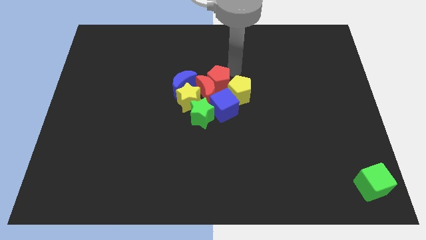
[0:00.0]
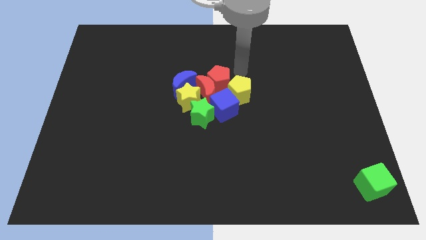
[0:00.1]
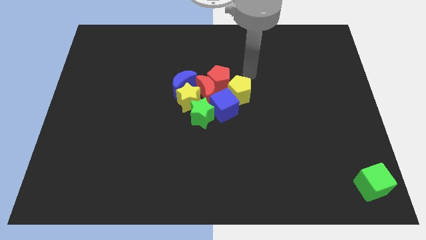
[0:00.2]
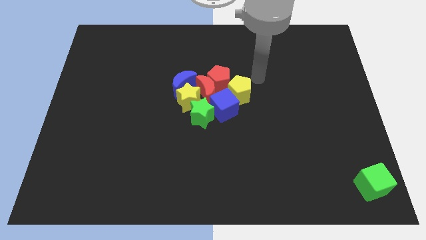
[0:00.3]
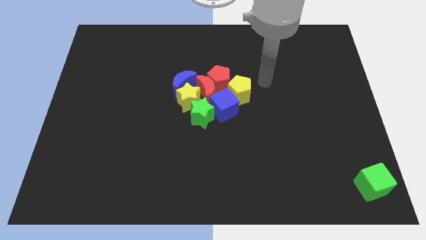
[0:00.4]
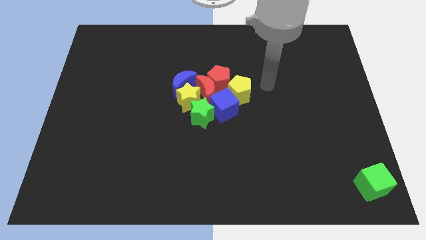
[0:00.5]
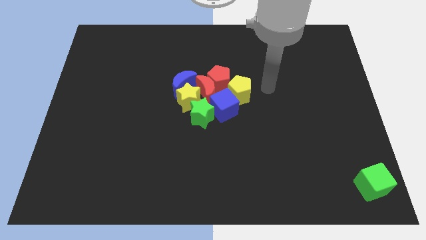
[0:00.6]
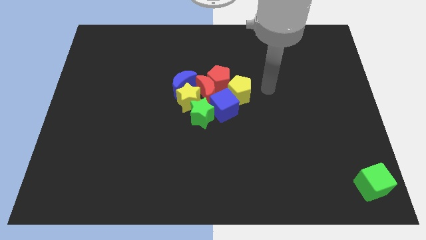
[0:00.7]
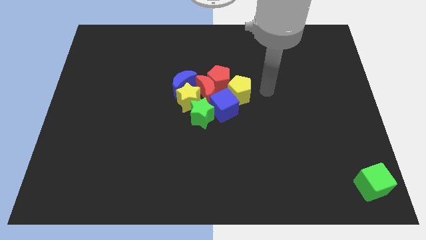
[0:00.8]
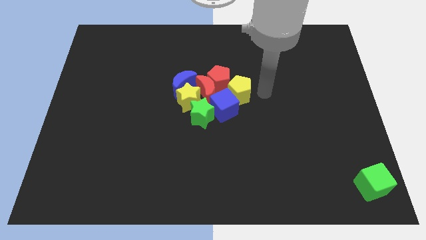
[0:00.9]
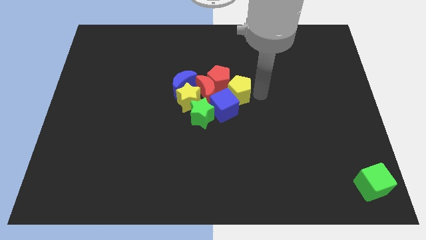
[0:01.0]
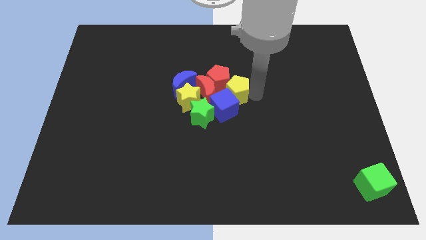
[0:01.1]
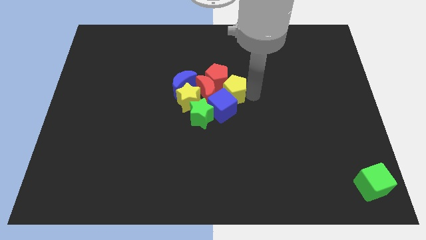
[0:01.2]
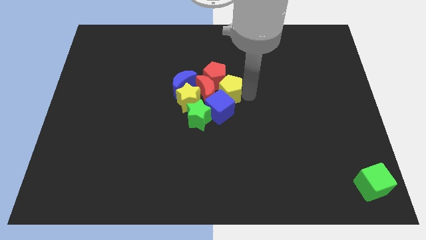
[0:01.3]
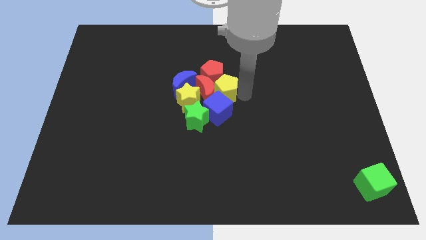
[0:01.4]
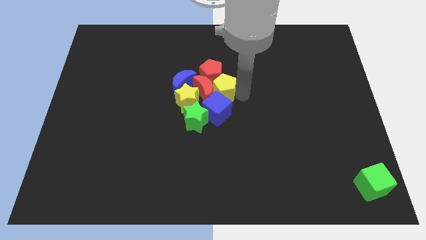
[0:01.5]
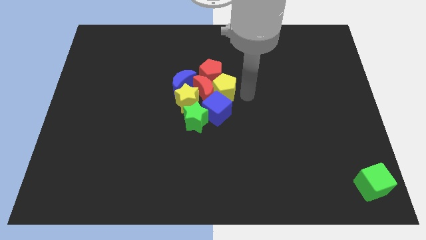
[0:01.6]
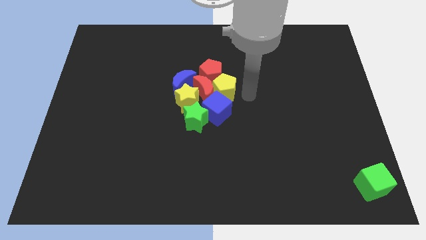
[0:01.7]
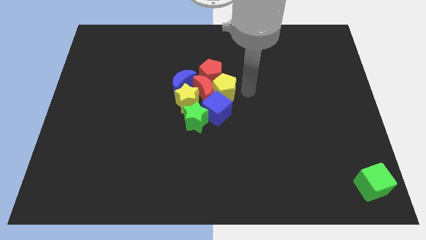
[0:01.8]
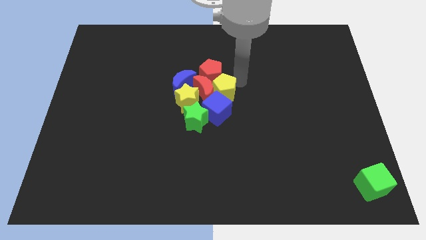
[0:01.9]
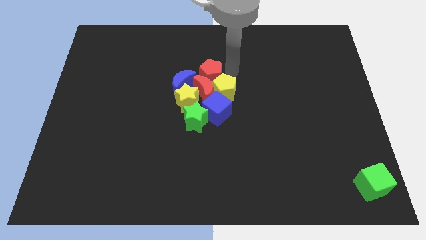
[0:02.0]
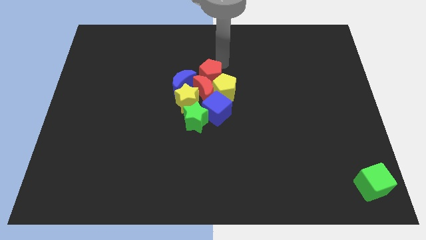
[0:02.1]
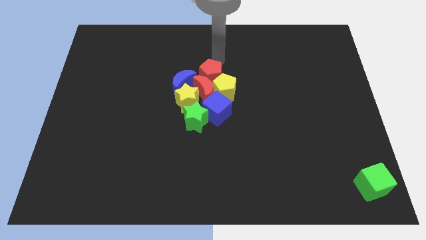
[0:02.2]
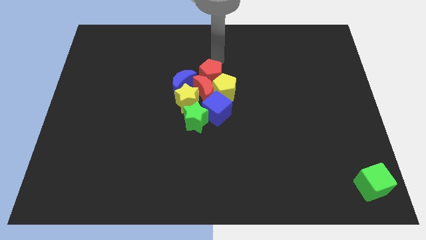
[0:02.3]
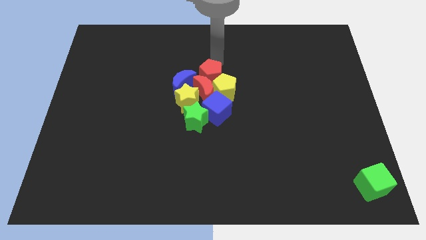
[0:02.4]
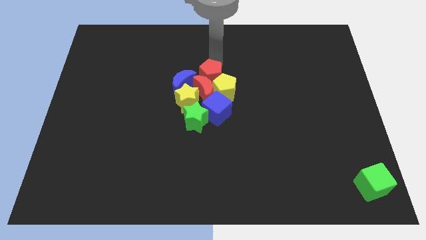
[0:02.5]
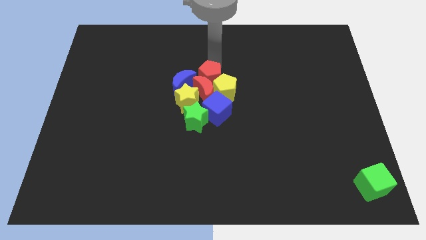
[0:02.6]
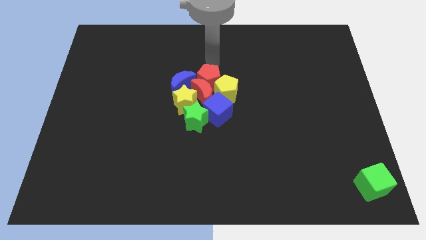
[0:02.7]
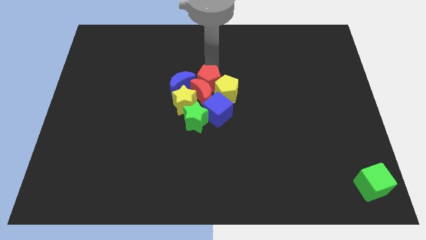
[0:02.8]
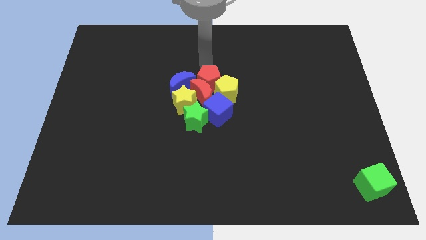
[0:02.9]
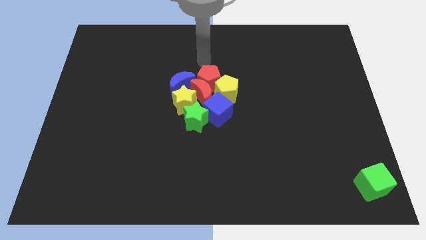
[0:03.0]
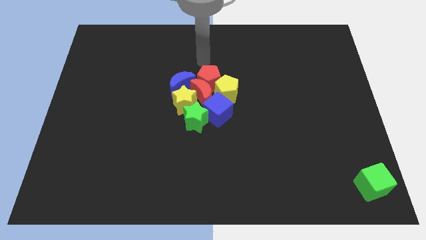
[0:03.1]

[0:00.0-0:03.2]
slide the yellow pentagon and the red pentagon close to the group of blocks

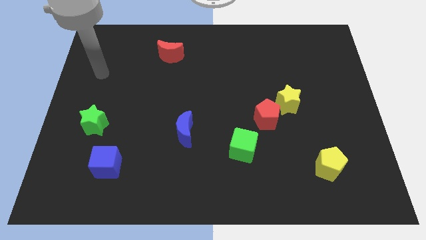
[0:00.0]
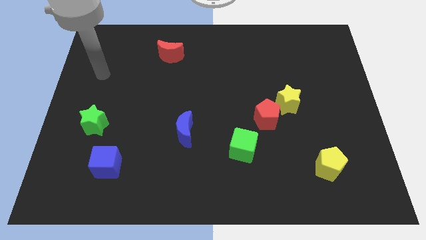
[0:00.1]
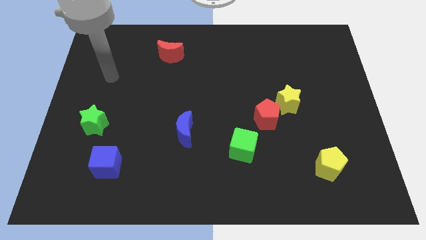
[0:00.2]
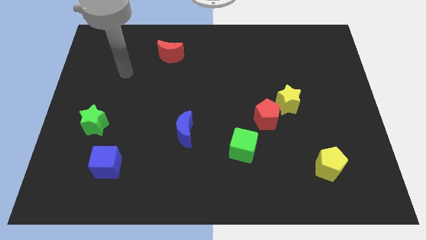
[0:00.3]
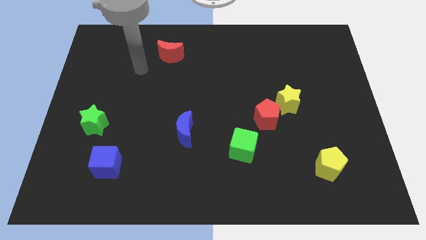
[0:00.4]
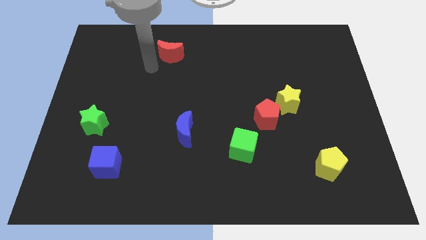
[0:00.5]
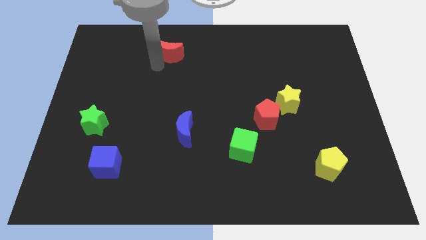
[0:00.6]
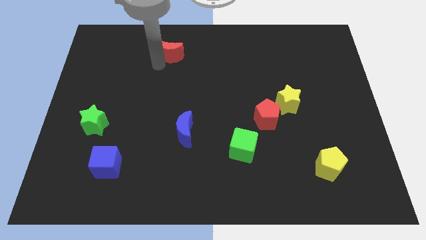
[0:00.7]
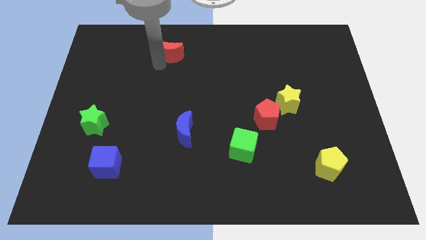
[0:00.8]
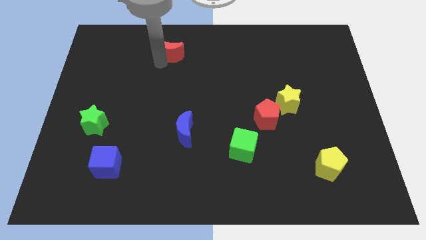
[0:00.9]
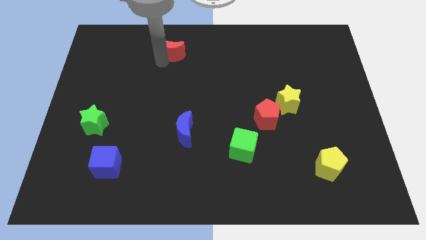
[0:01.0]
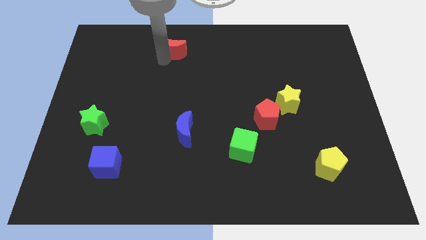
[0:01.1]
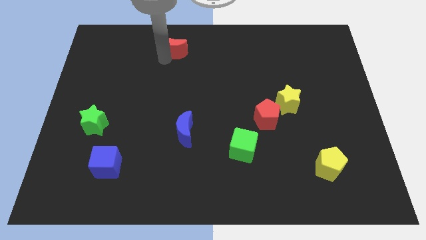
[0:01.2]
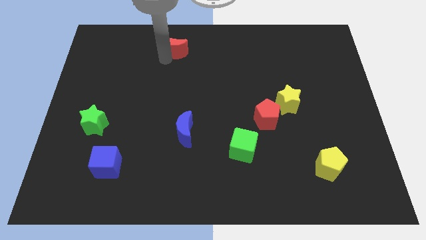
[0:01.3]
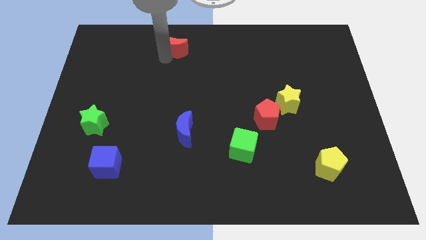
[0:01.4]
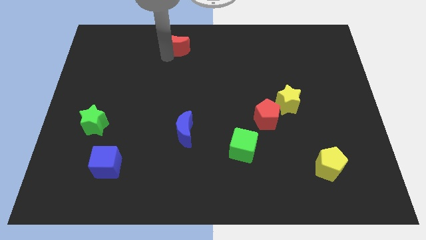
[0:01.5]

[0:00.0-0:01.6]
push the red crescent to the center top

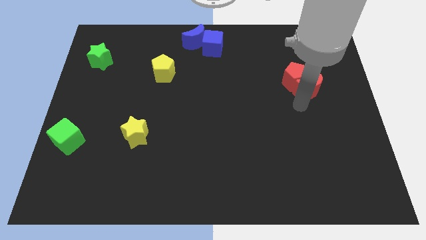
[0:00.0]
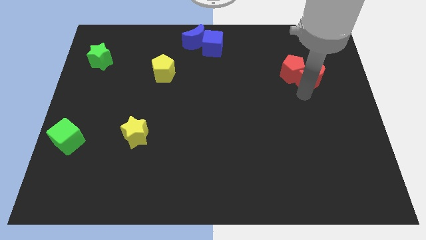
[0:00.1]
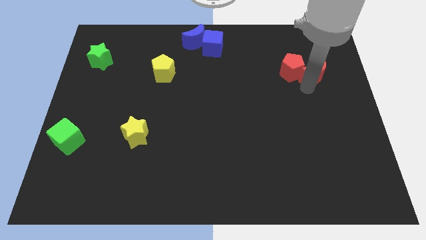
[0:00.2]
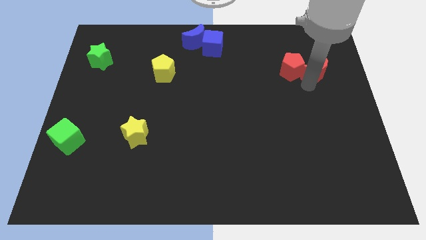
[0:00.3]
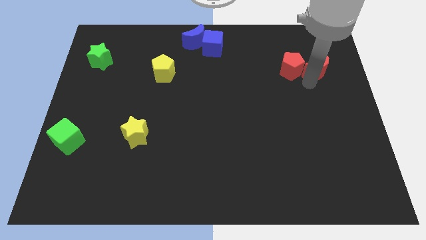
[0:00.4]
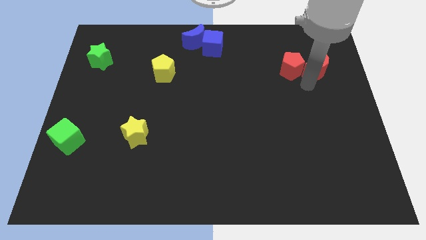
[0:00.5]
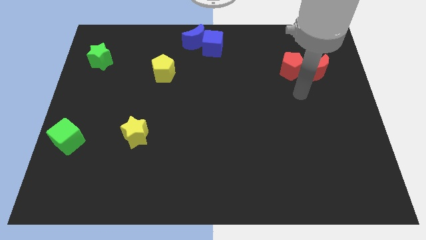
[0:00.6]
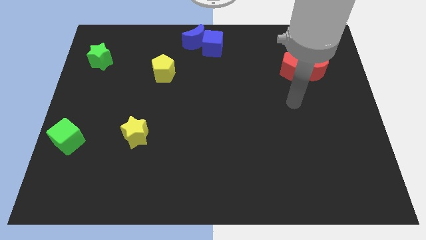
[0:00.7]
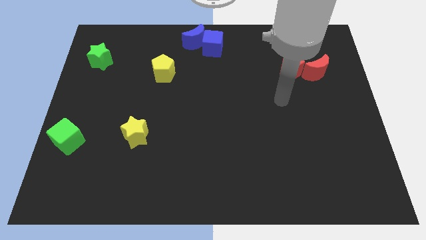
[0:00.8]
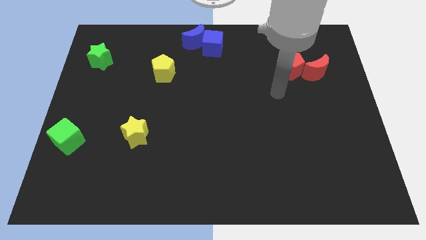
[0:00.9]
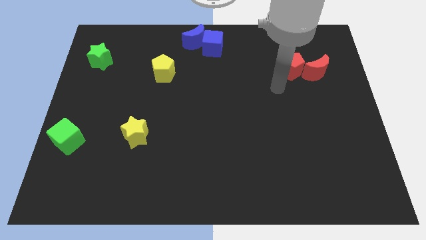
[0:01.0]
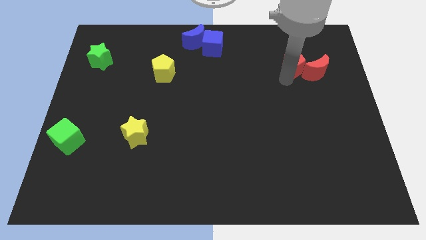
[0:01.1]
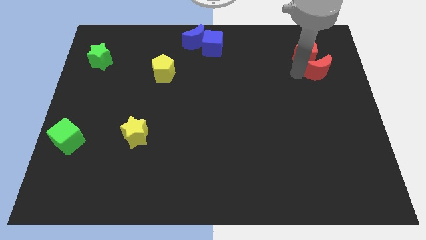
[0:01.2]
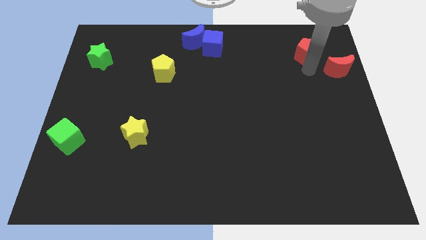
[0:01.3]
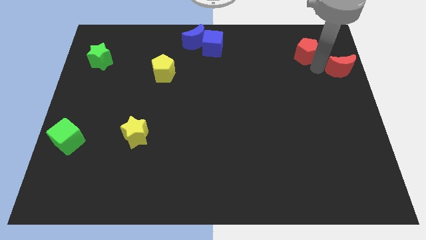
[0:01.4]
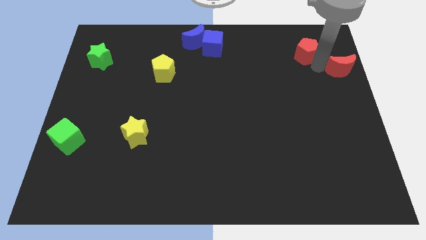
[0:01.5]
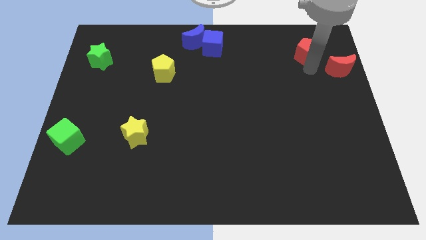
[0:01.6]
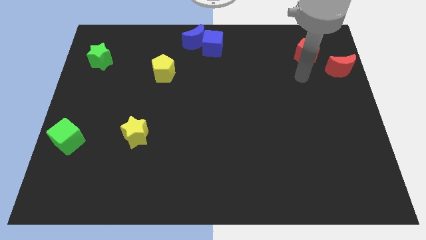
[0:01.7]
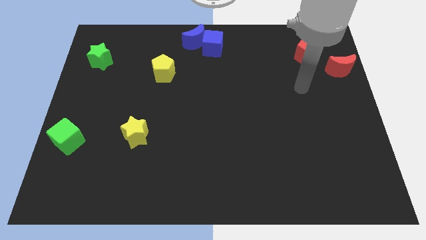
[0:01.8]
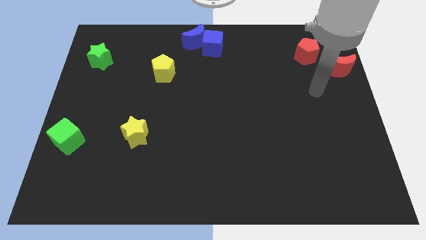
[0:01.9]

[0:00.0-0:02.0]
move the red pentagon and the red crescent away from each other

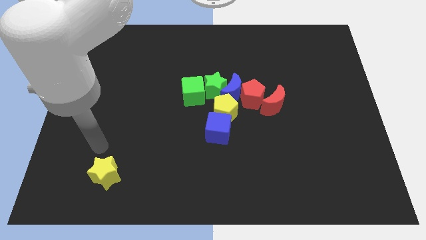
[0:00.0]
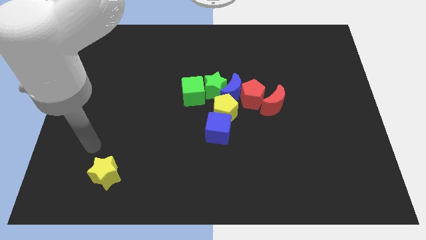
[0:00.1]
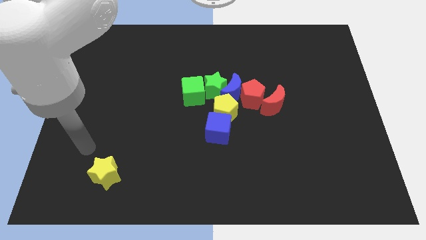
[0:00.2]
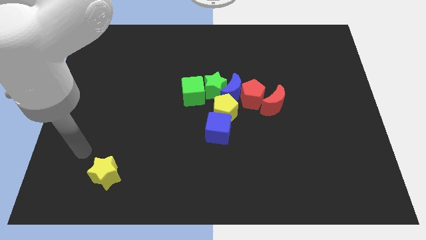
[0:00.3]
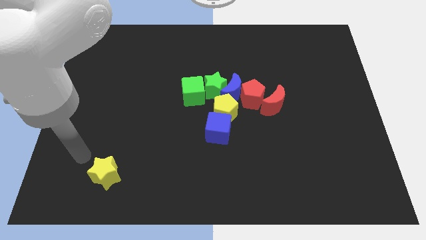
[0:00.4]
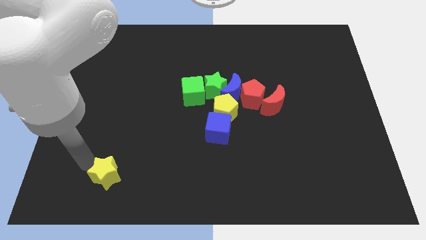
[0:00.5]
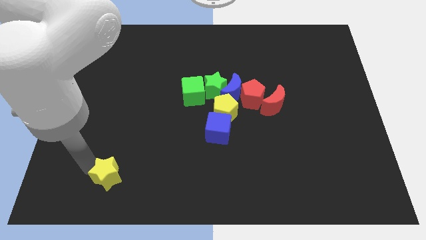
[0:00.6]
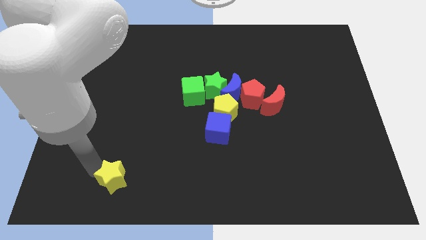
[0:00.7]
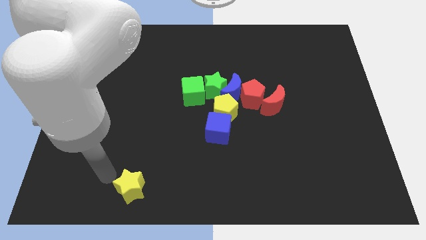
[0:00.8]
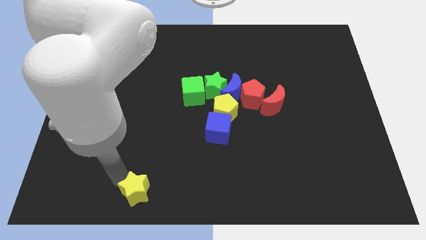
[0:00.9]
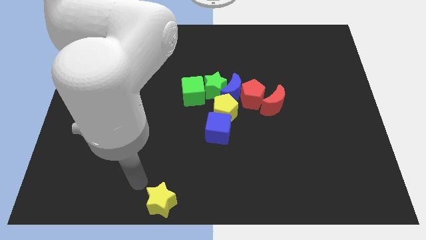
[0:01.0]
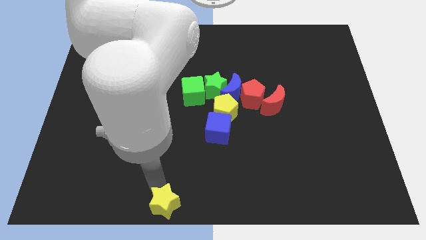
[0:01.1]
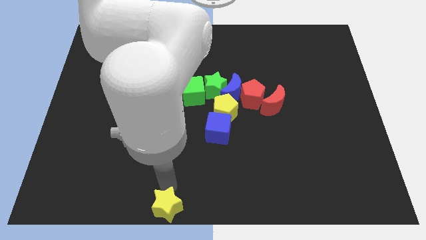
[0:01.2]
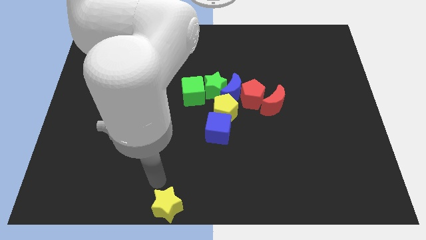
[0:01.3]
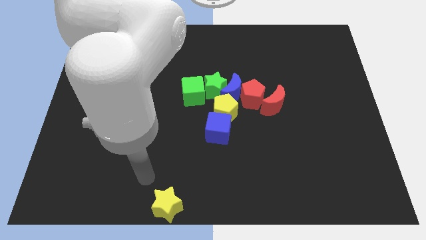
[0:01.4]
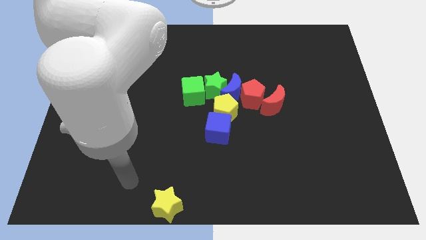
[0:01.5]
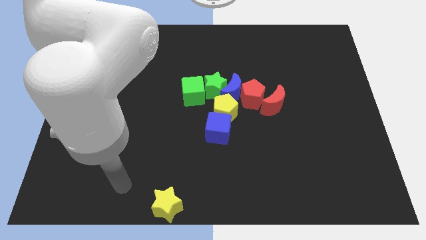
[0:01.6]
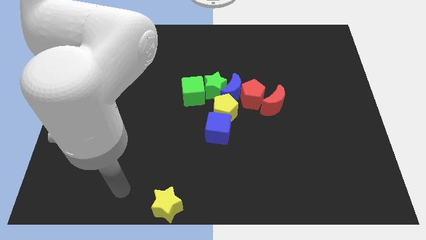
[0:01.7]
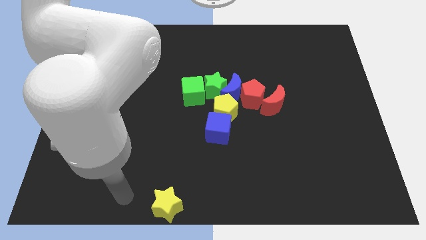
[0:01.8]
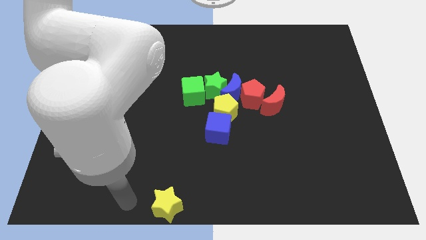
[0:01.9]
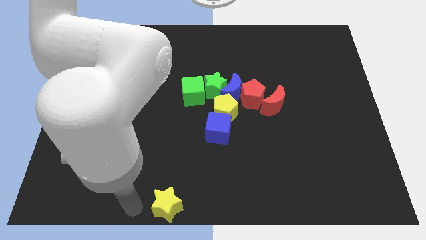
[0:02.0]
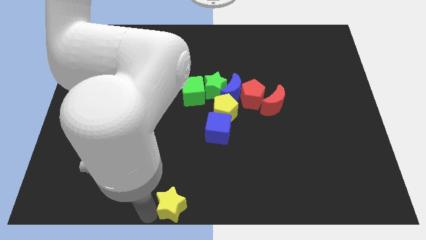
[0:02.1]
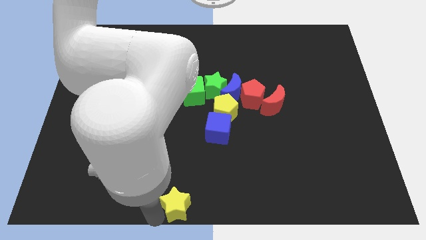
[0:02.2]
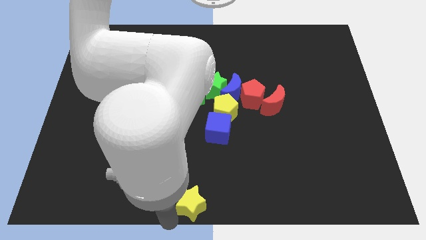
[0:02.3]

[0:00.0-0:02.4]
slide the yellow star to the bottom center

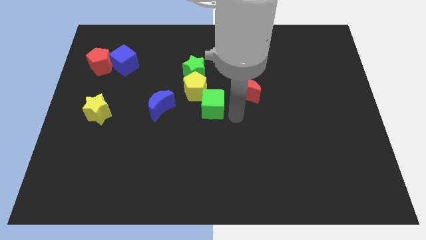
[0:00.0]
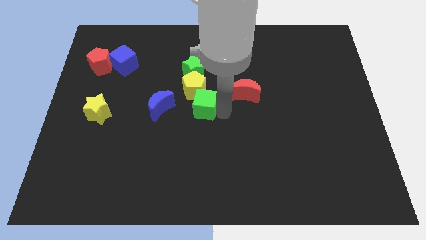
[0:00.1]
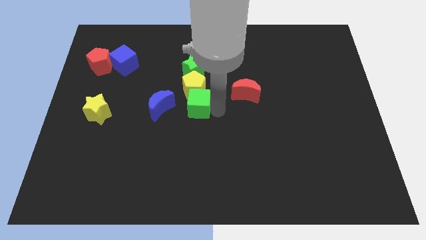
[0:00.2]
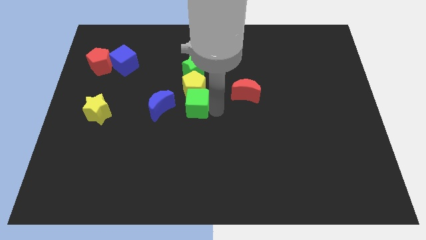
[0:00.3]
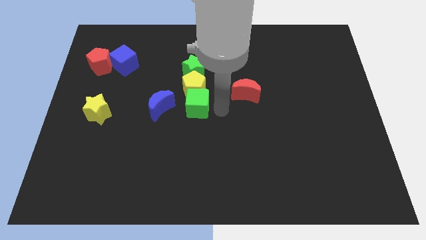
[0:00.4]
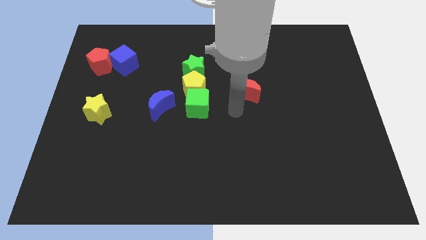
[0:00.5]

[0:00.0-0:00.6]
push the green cube to the right side of the blue crescent
